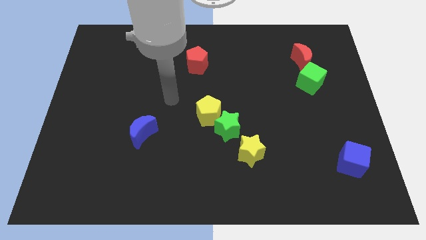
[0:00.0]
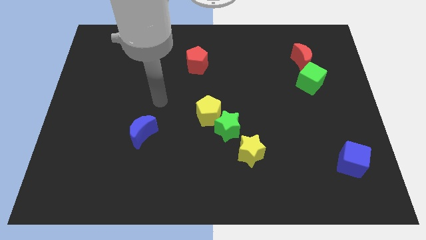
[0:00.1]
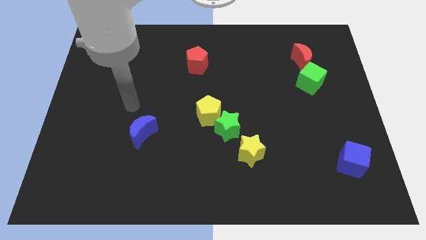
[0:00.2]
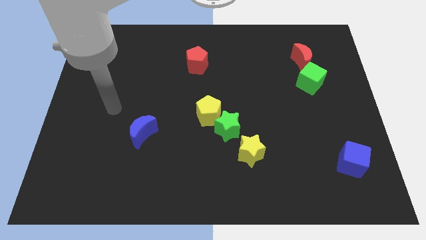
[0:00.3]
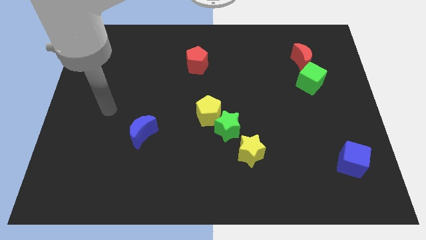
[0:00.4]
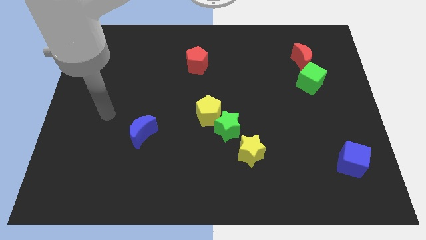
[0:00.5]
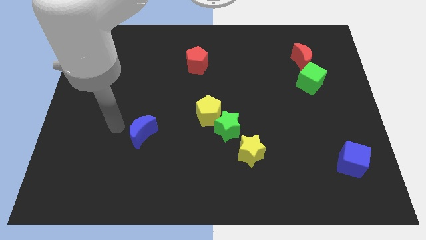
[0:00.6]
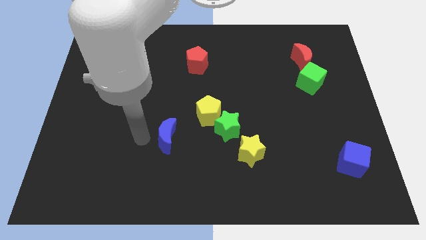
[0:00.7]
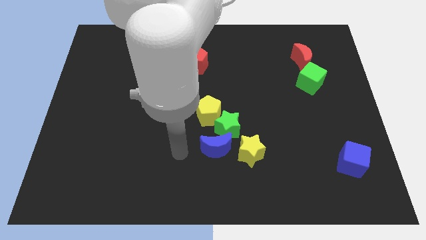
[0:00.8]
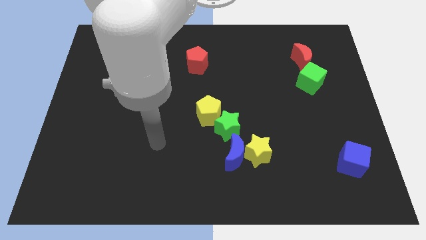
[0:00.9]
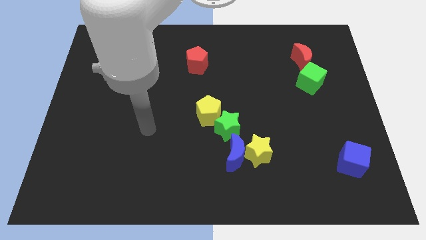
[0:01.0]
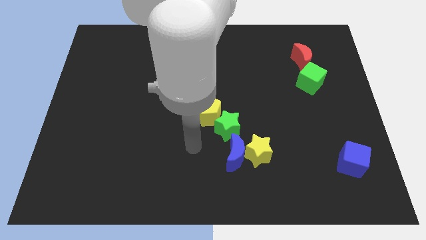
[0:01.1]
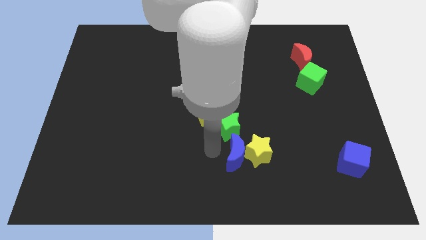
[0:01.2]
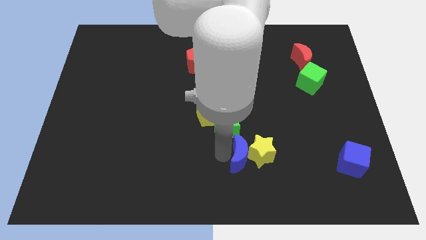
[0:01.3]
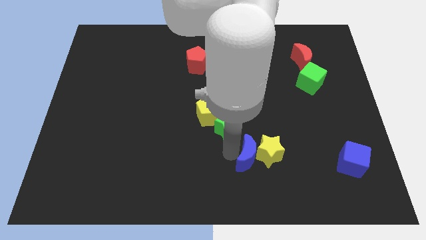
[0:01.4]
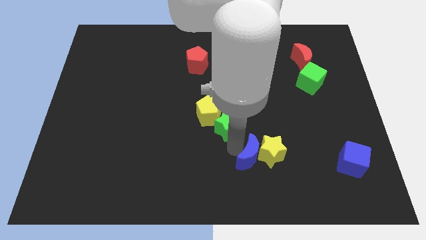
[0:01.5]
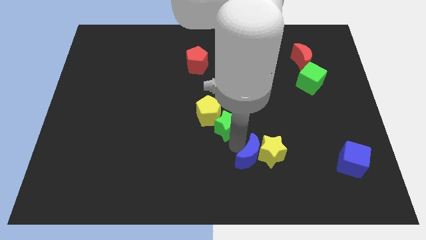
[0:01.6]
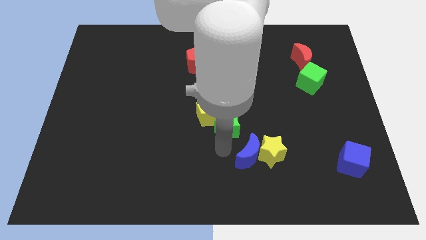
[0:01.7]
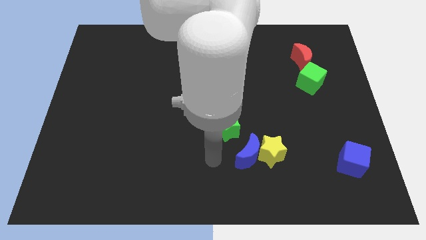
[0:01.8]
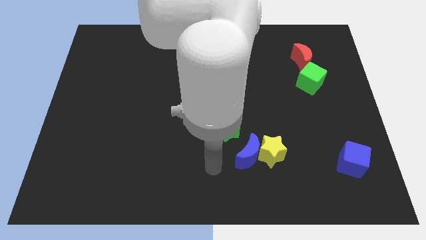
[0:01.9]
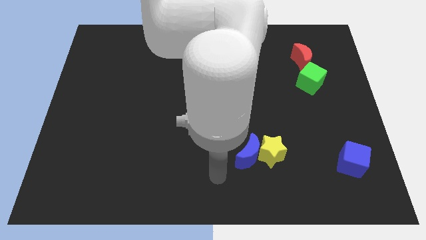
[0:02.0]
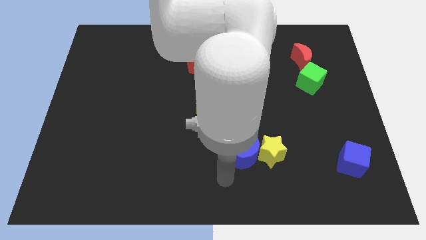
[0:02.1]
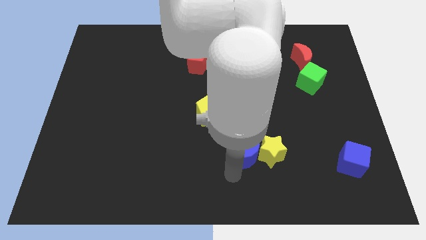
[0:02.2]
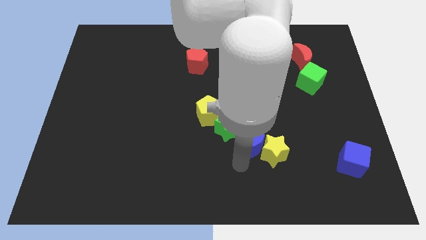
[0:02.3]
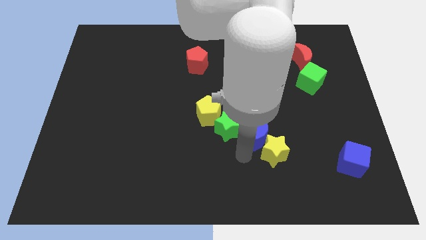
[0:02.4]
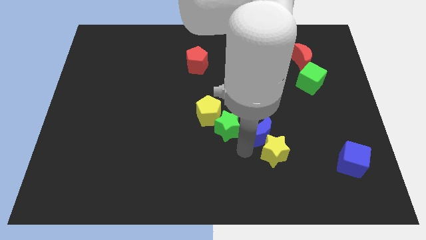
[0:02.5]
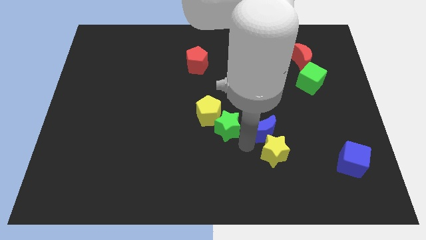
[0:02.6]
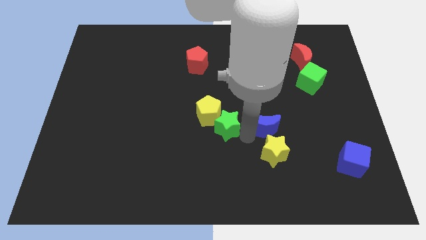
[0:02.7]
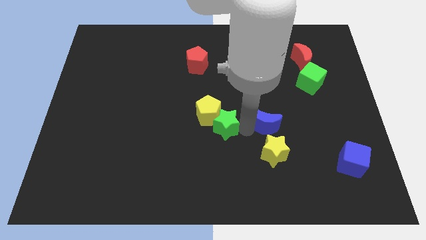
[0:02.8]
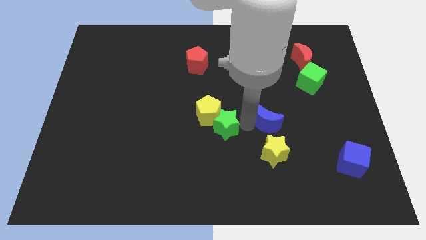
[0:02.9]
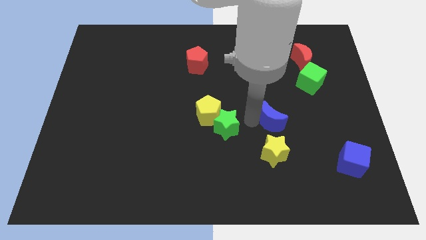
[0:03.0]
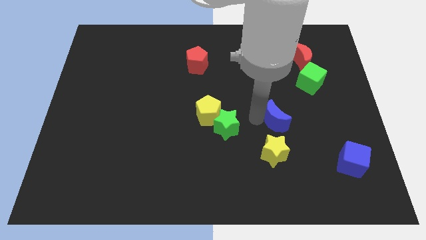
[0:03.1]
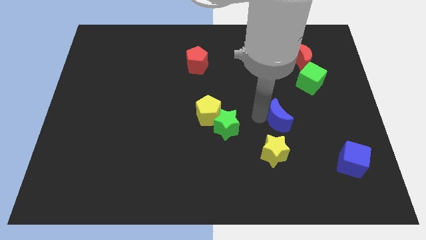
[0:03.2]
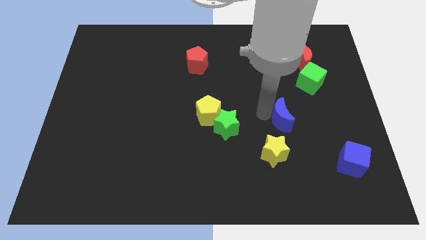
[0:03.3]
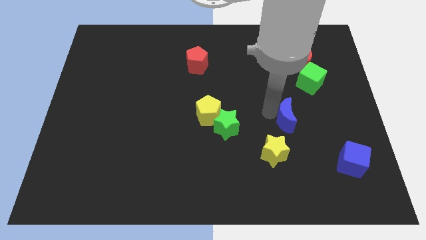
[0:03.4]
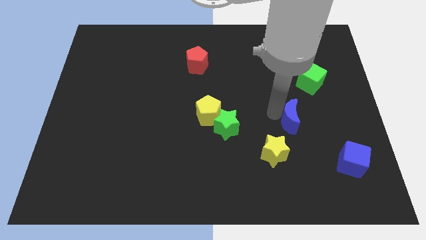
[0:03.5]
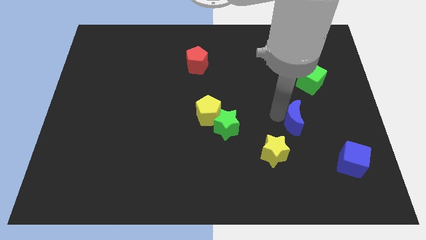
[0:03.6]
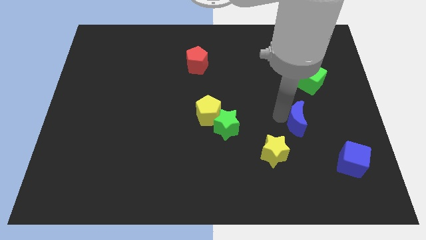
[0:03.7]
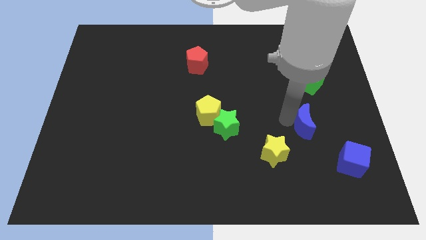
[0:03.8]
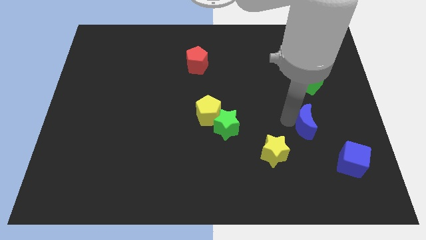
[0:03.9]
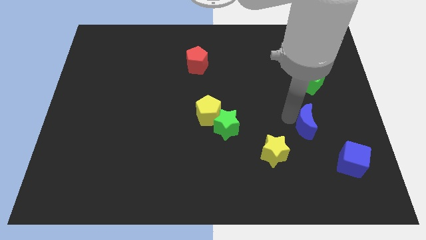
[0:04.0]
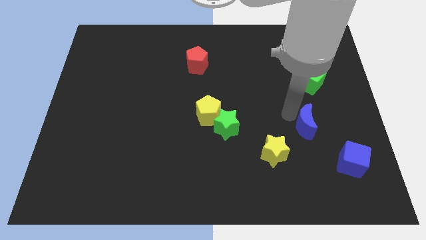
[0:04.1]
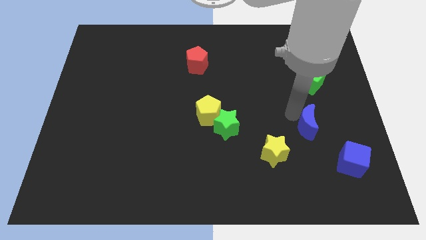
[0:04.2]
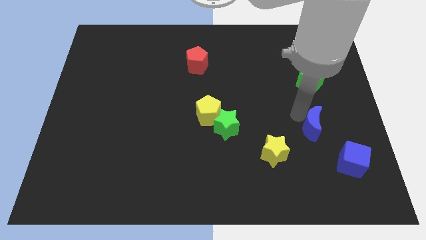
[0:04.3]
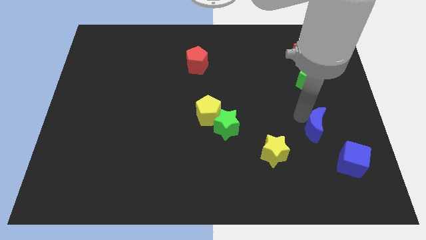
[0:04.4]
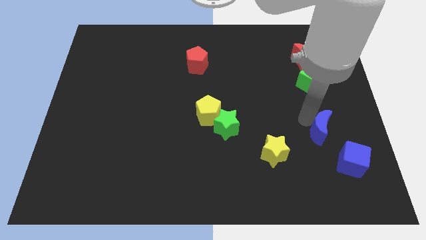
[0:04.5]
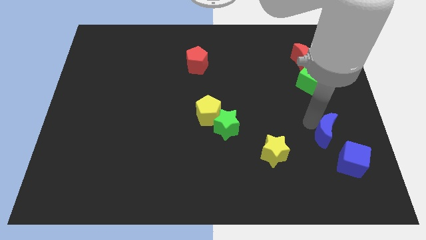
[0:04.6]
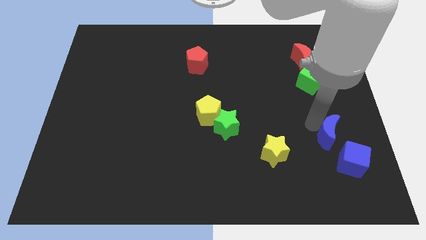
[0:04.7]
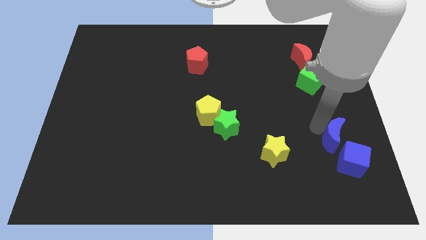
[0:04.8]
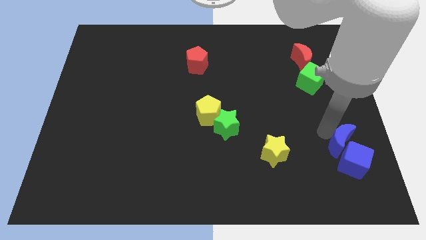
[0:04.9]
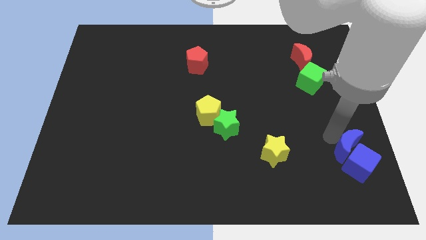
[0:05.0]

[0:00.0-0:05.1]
push the blue moon next to the blue cube

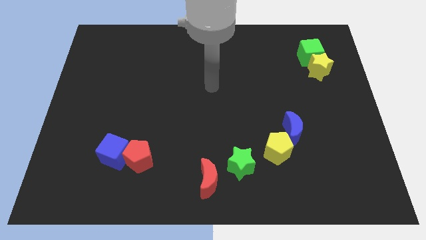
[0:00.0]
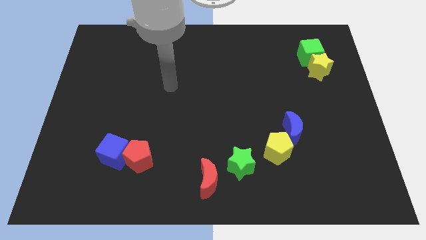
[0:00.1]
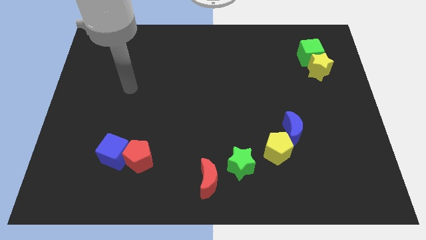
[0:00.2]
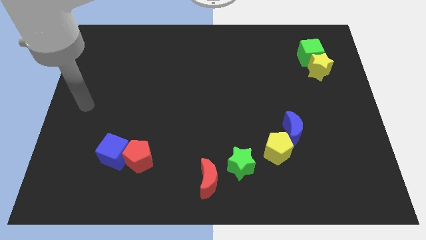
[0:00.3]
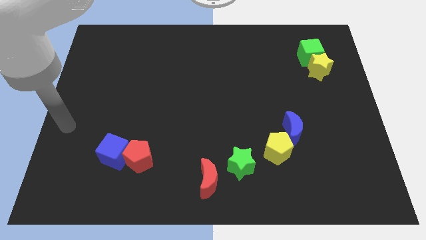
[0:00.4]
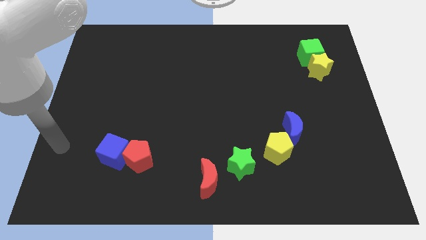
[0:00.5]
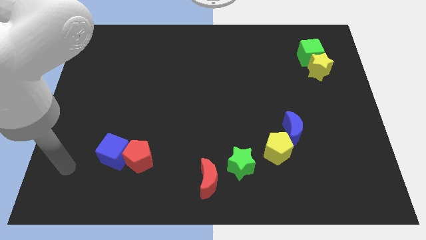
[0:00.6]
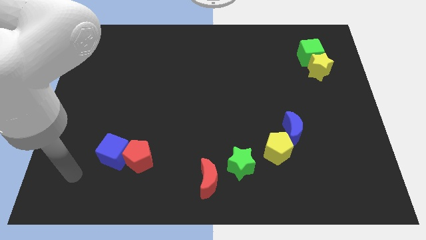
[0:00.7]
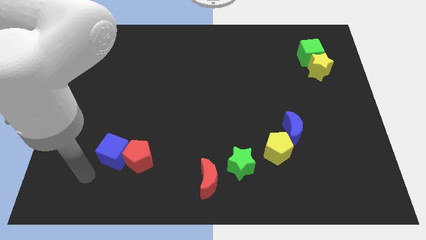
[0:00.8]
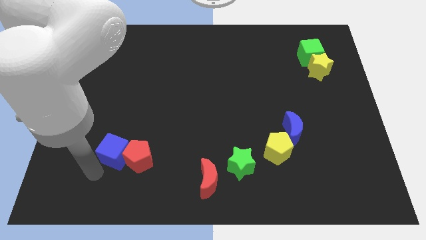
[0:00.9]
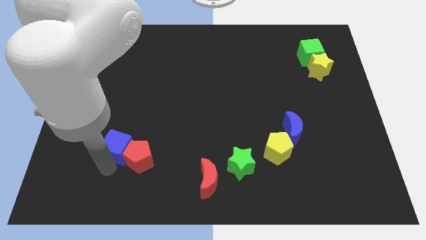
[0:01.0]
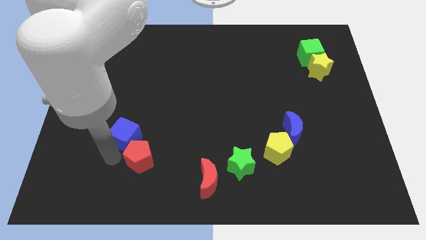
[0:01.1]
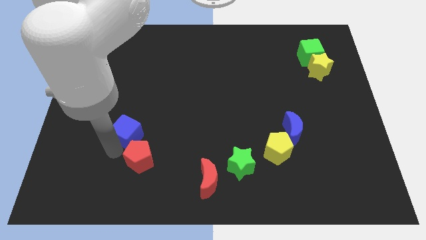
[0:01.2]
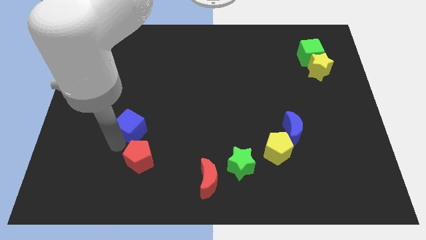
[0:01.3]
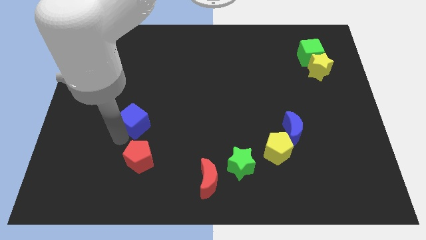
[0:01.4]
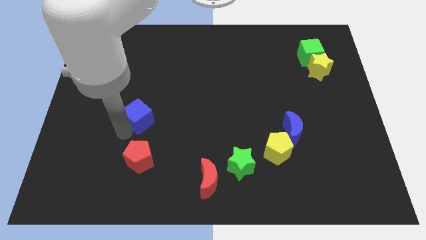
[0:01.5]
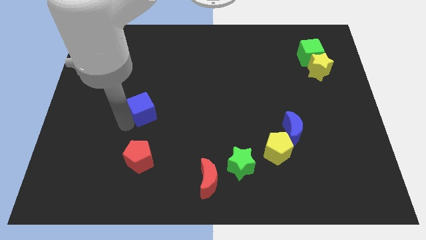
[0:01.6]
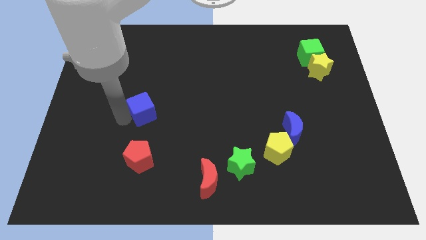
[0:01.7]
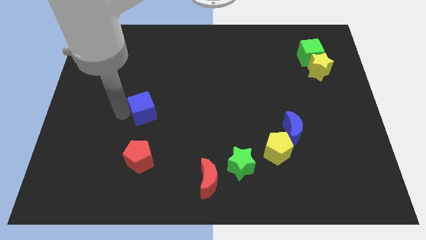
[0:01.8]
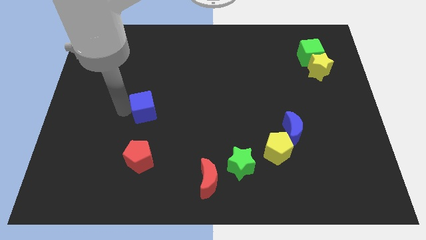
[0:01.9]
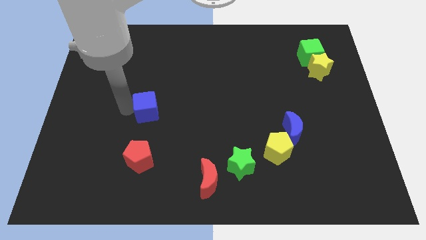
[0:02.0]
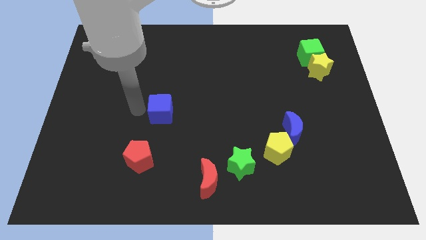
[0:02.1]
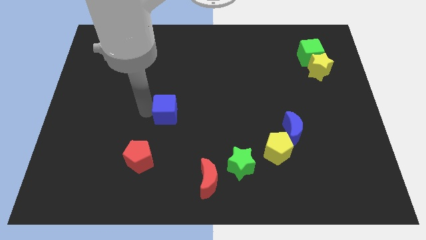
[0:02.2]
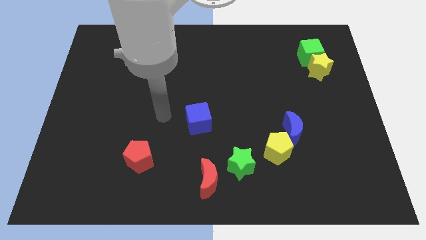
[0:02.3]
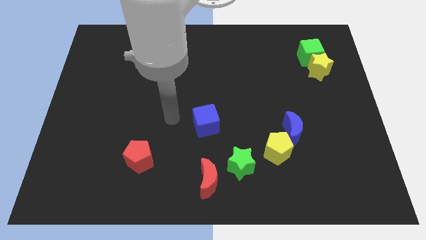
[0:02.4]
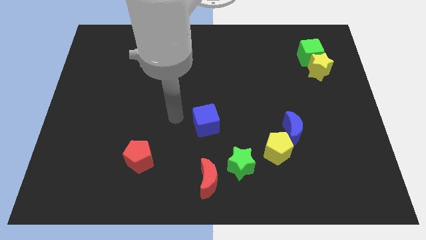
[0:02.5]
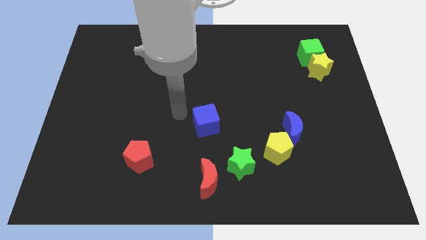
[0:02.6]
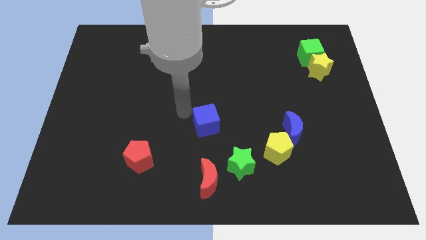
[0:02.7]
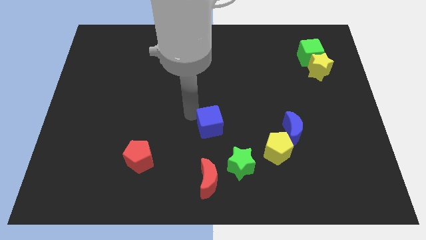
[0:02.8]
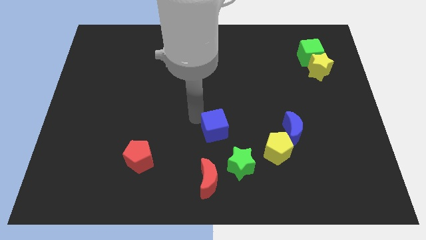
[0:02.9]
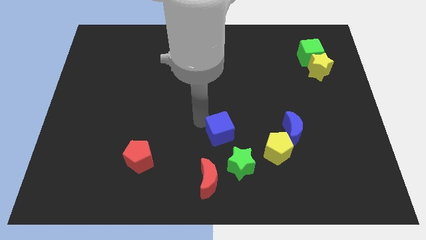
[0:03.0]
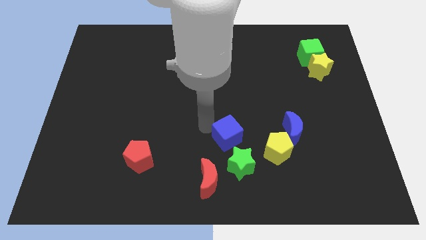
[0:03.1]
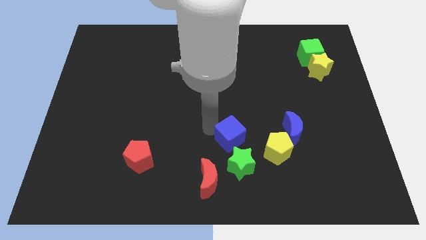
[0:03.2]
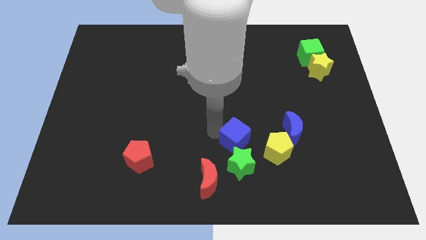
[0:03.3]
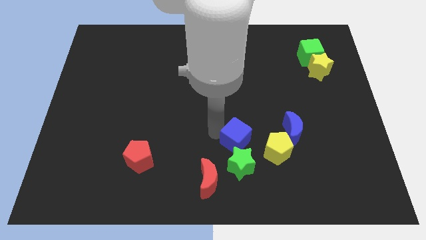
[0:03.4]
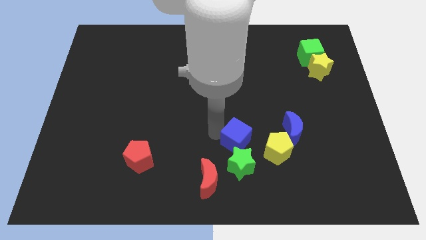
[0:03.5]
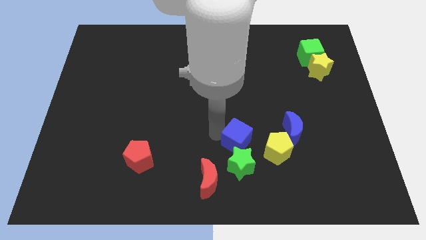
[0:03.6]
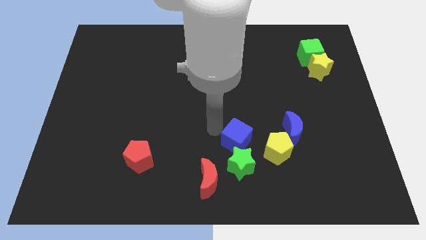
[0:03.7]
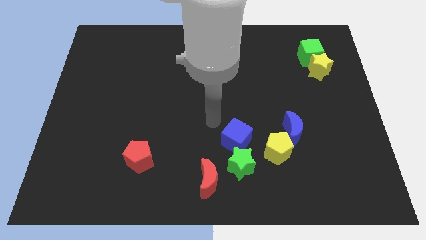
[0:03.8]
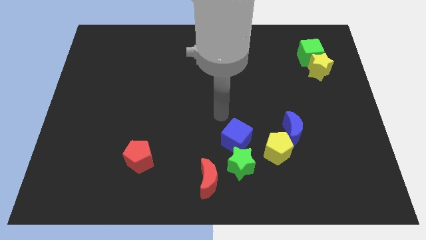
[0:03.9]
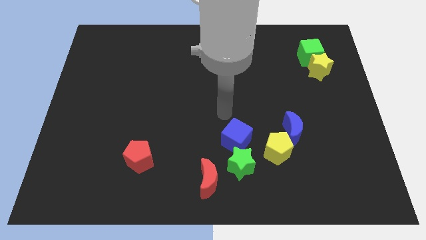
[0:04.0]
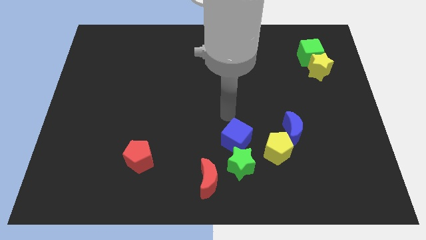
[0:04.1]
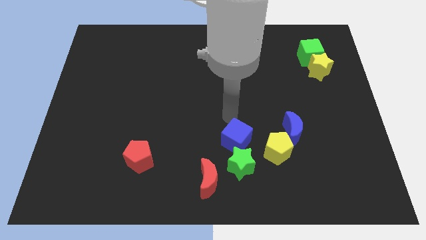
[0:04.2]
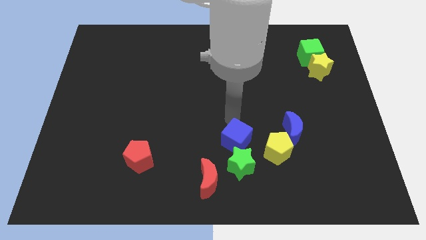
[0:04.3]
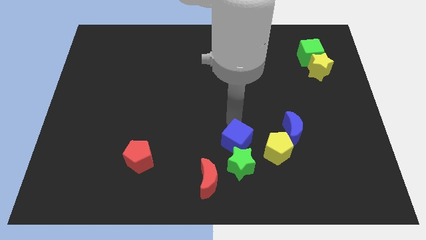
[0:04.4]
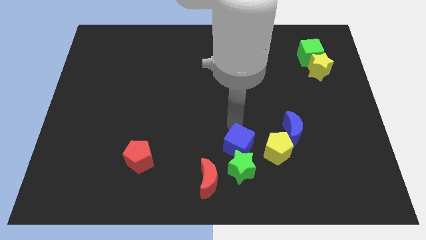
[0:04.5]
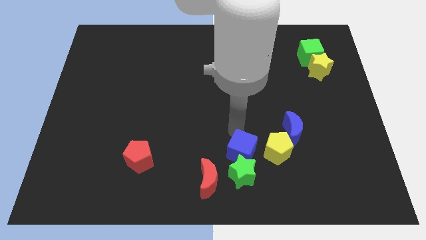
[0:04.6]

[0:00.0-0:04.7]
put the blue cube next to the green star
